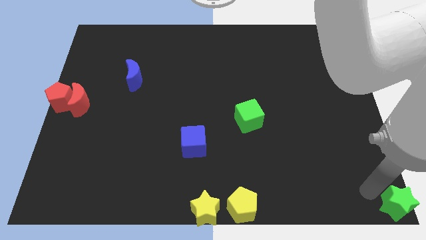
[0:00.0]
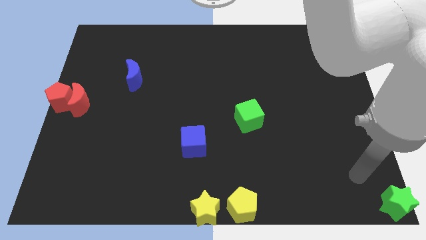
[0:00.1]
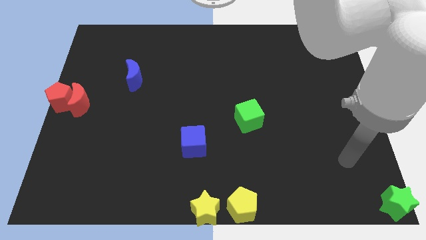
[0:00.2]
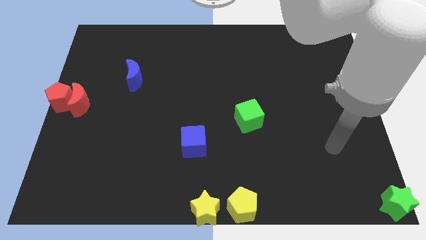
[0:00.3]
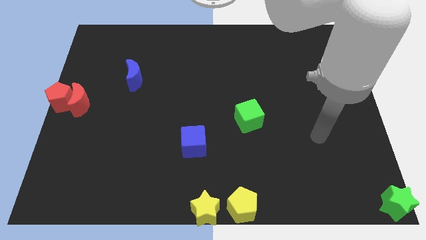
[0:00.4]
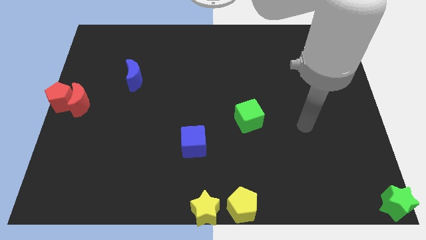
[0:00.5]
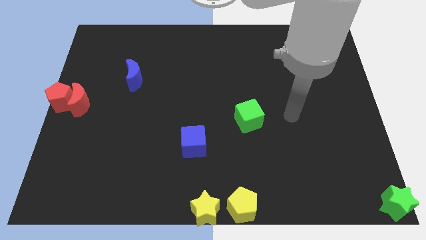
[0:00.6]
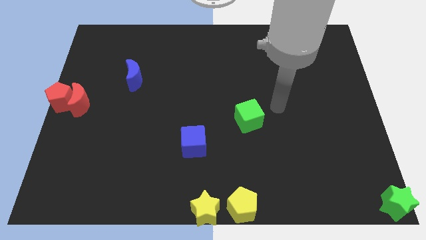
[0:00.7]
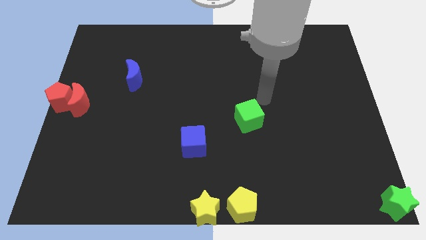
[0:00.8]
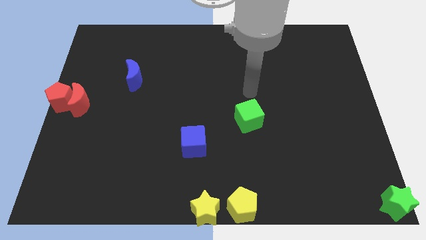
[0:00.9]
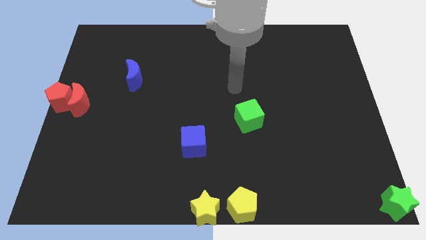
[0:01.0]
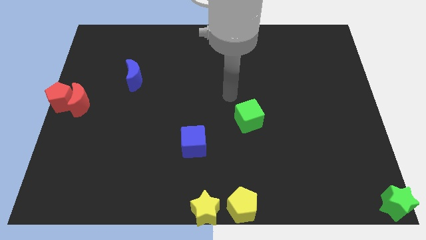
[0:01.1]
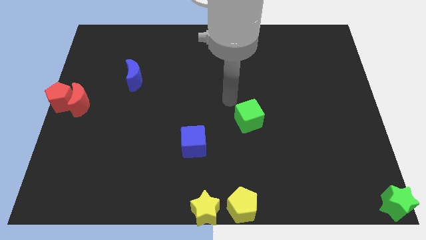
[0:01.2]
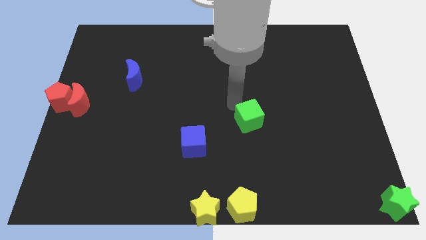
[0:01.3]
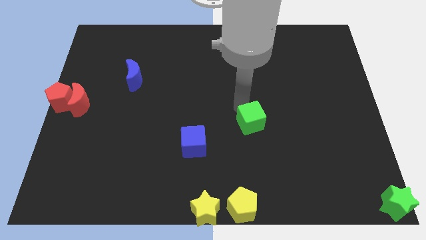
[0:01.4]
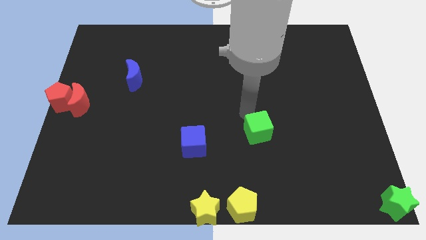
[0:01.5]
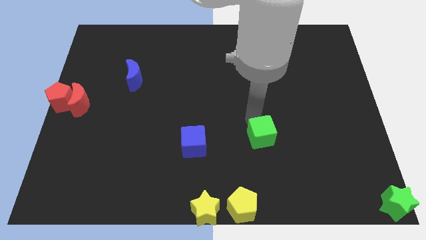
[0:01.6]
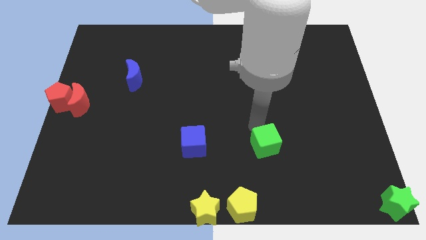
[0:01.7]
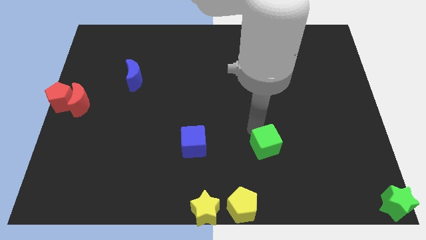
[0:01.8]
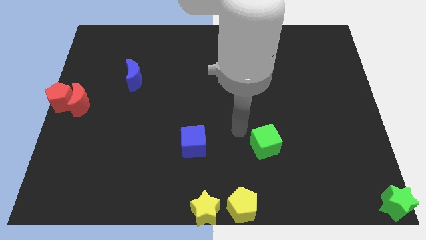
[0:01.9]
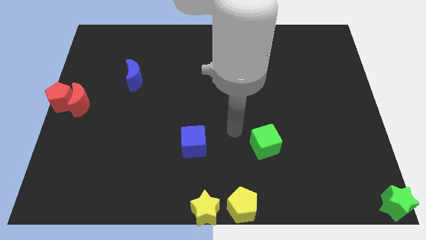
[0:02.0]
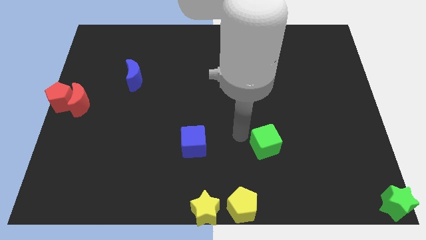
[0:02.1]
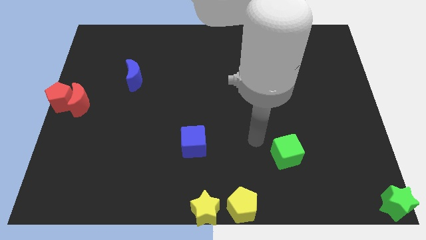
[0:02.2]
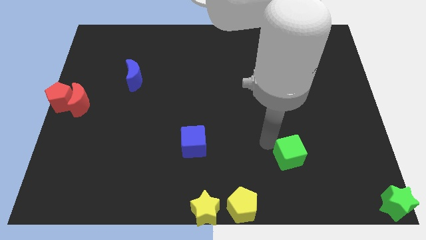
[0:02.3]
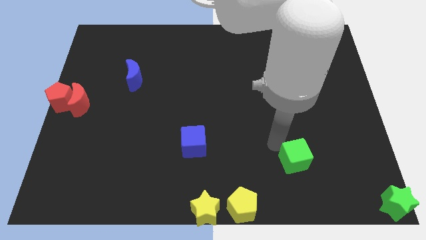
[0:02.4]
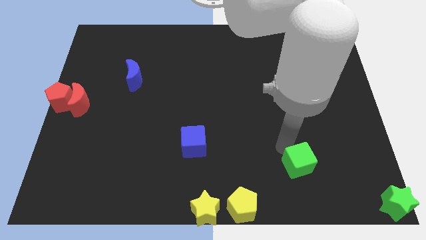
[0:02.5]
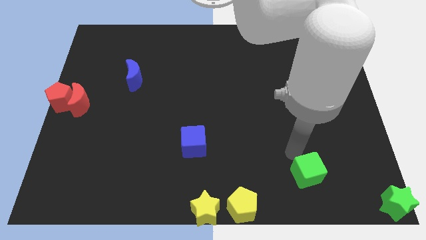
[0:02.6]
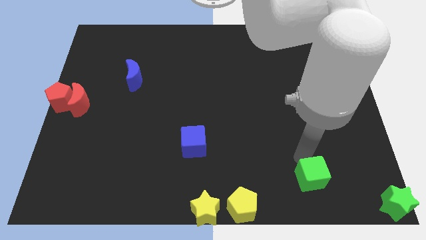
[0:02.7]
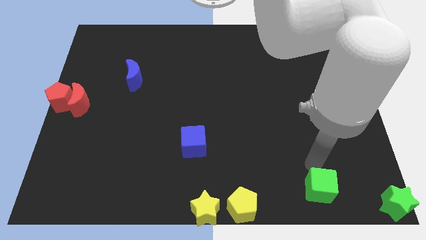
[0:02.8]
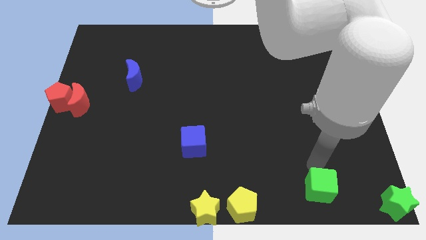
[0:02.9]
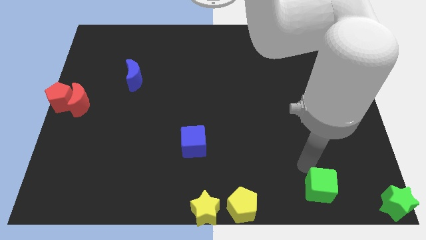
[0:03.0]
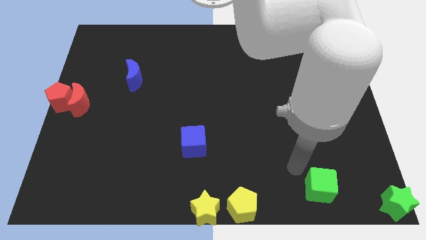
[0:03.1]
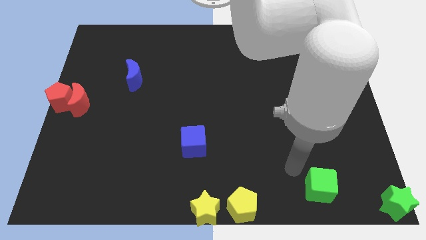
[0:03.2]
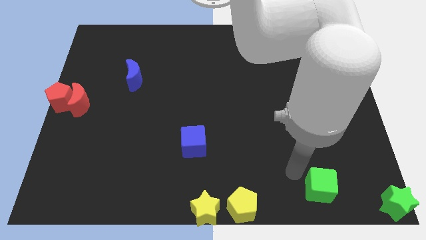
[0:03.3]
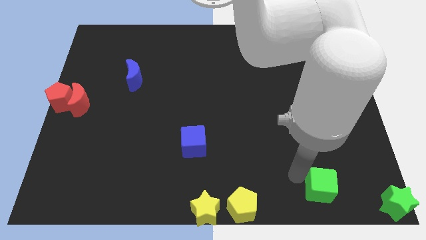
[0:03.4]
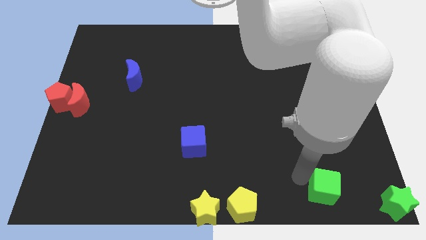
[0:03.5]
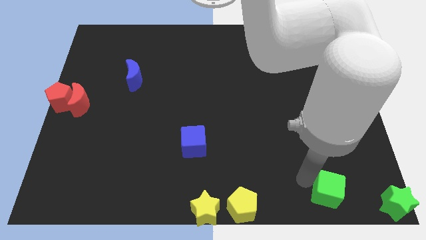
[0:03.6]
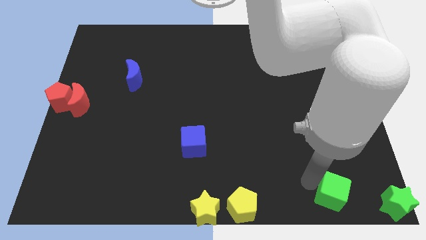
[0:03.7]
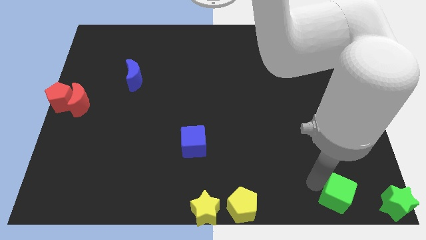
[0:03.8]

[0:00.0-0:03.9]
slide the green cube towards the left side of the green star

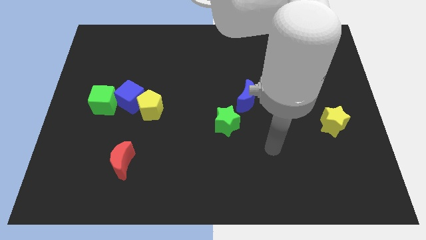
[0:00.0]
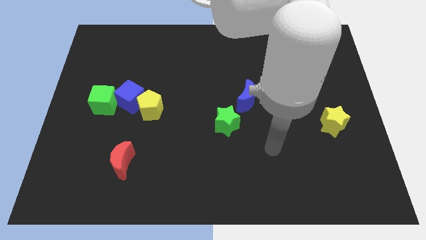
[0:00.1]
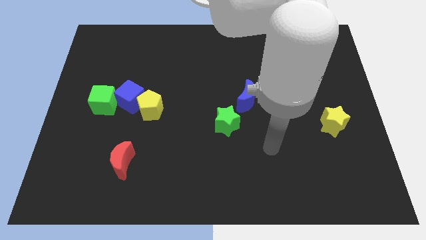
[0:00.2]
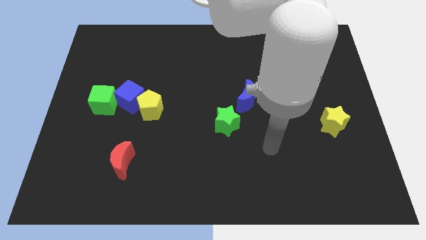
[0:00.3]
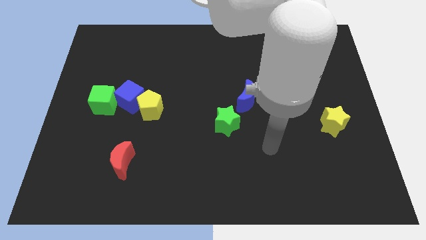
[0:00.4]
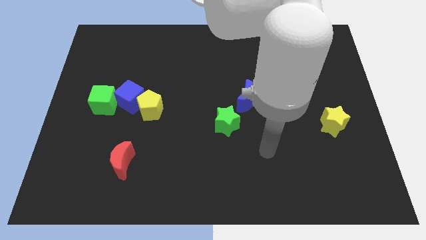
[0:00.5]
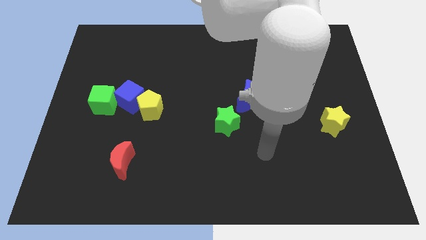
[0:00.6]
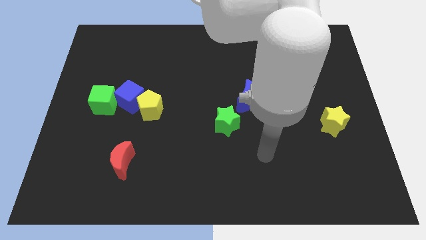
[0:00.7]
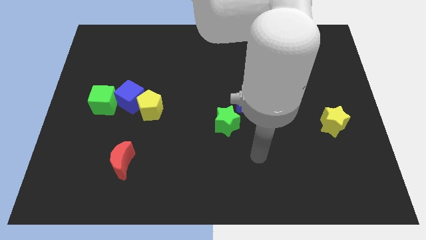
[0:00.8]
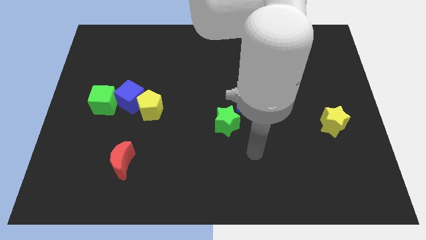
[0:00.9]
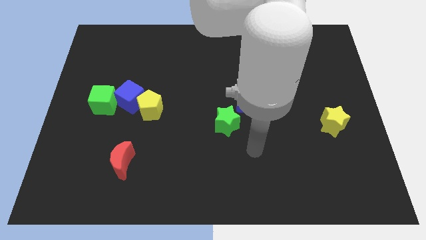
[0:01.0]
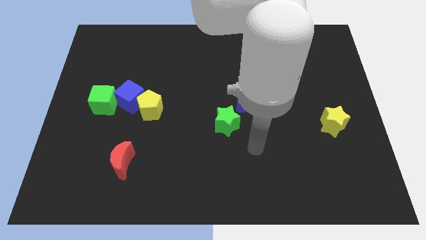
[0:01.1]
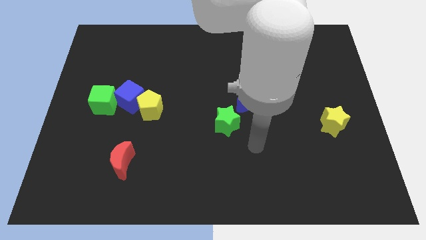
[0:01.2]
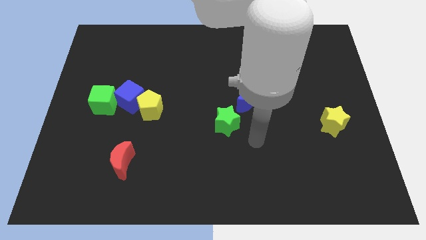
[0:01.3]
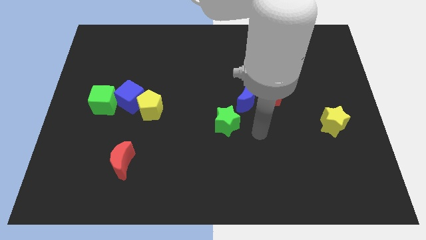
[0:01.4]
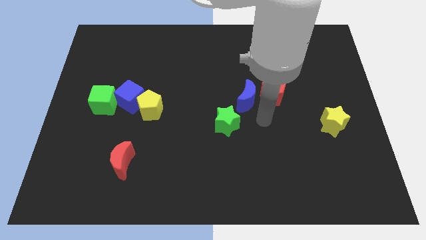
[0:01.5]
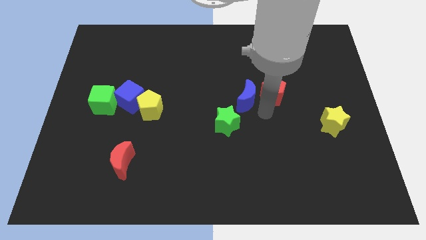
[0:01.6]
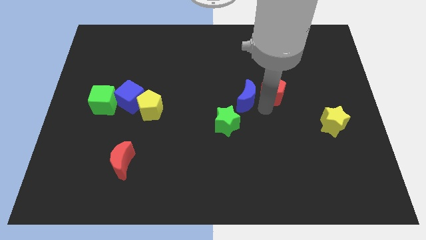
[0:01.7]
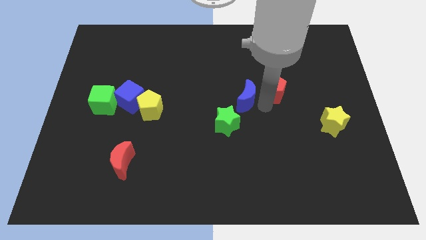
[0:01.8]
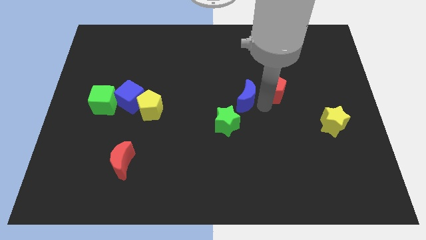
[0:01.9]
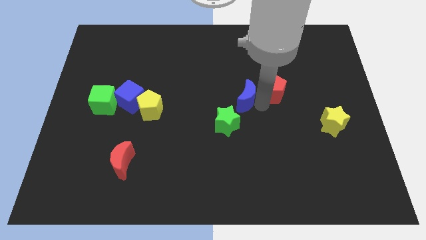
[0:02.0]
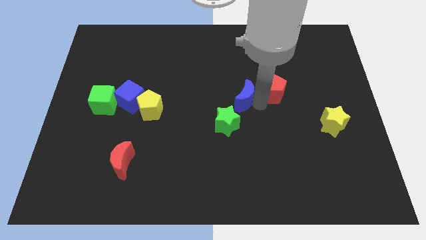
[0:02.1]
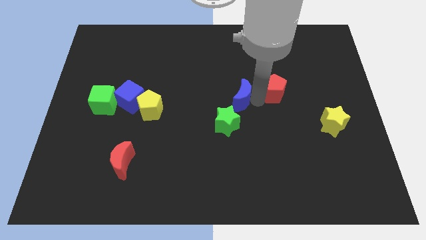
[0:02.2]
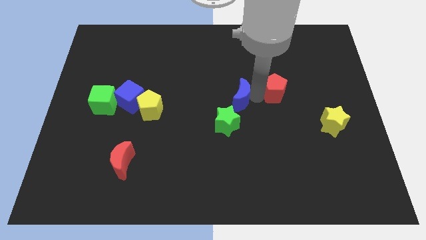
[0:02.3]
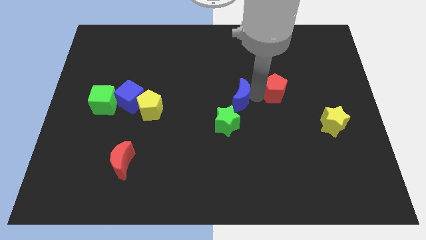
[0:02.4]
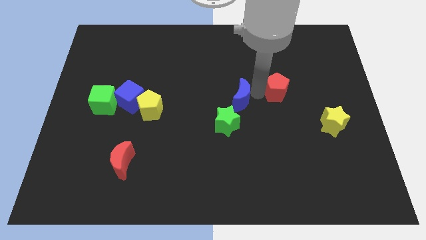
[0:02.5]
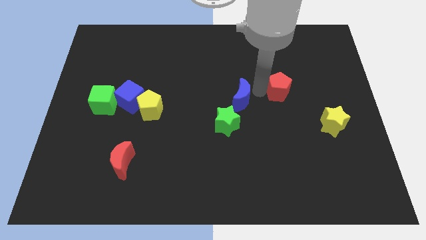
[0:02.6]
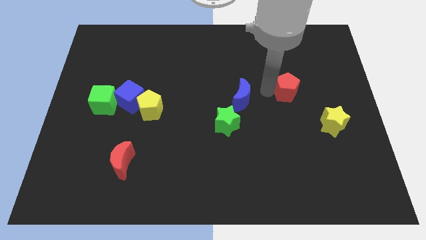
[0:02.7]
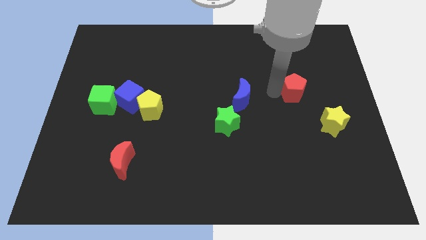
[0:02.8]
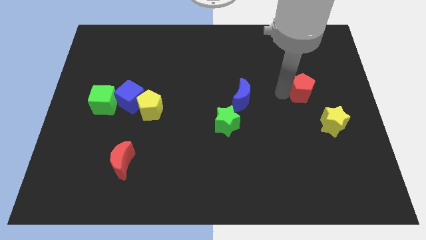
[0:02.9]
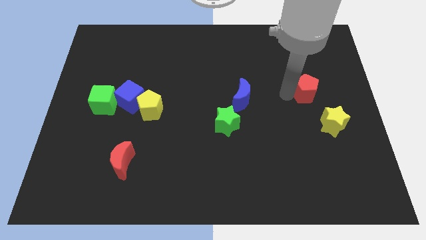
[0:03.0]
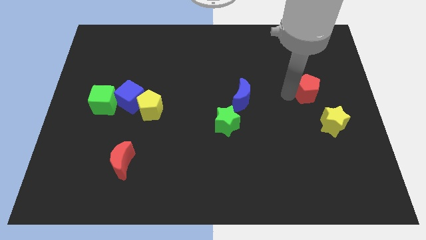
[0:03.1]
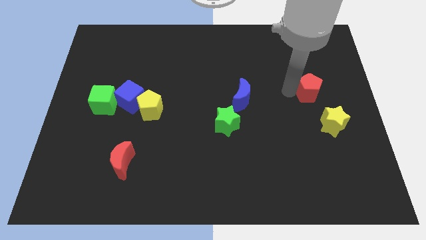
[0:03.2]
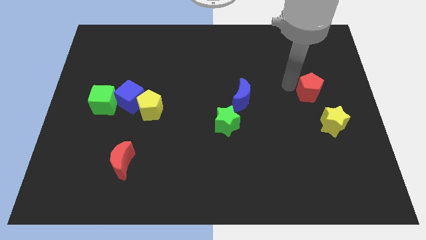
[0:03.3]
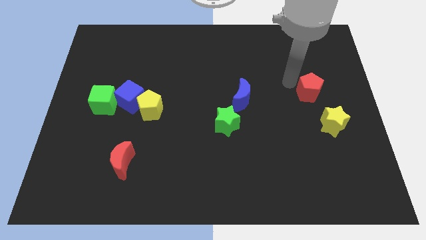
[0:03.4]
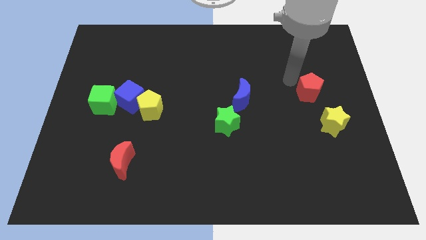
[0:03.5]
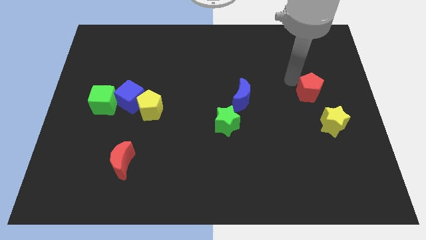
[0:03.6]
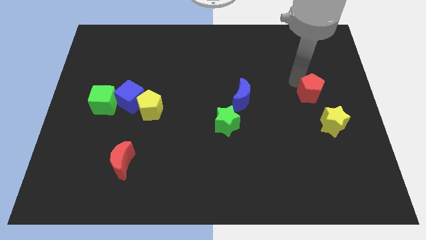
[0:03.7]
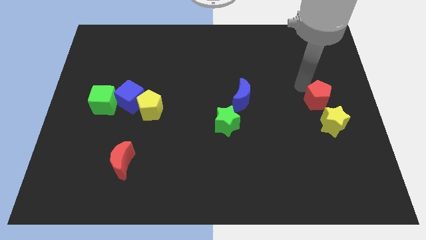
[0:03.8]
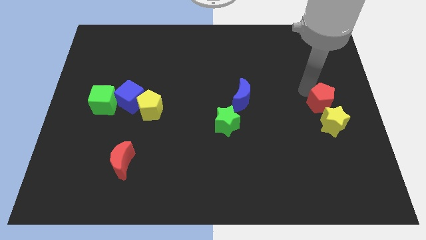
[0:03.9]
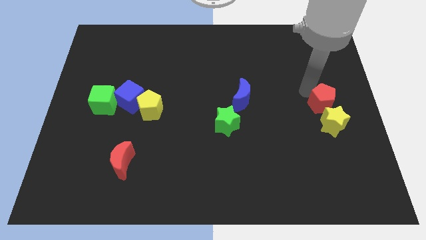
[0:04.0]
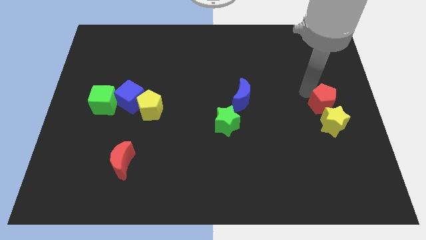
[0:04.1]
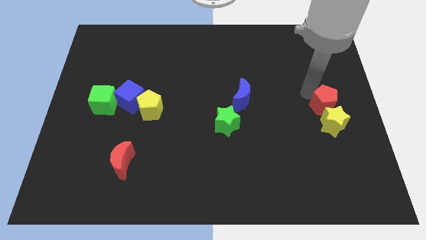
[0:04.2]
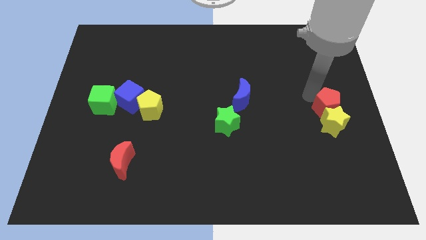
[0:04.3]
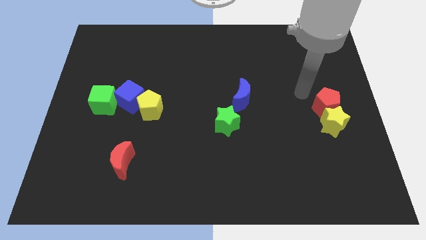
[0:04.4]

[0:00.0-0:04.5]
push the red pentagon into the yellow star

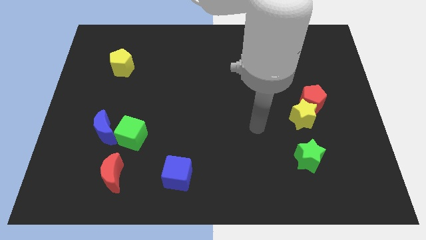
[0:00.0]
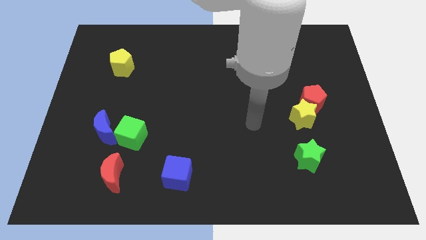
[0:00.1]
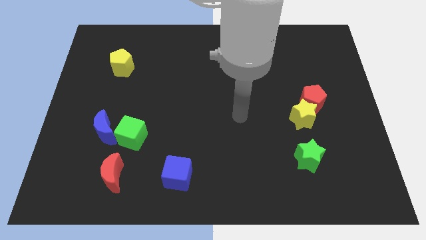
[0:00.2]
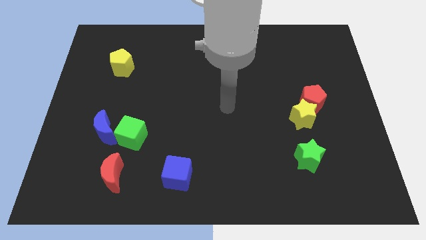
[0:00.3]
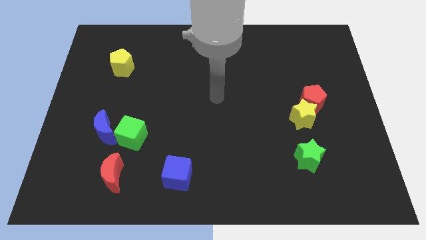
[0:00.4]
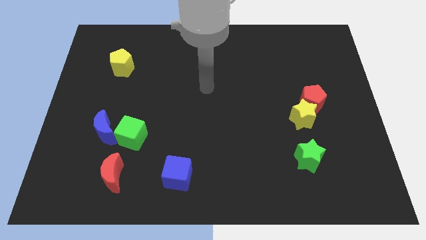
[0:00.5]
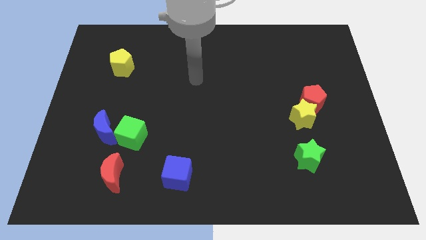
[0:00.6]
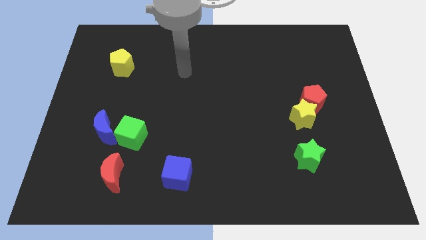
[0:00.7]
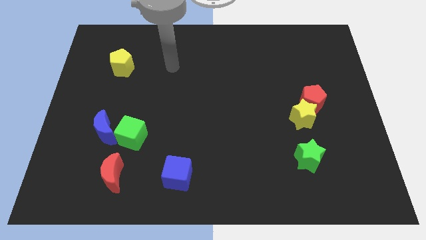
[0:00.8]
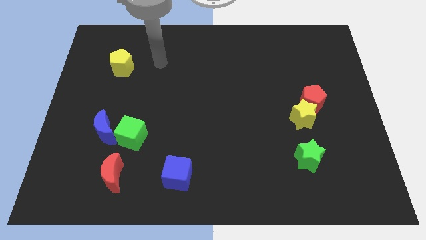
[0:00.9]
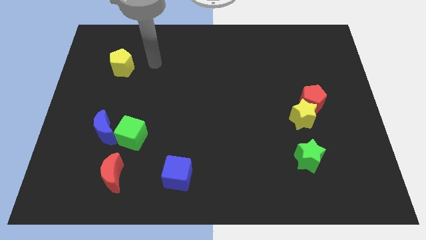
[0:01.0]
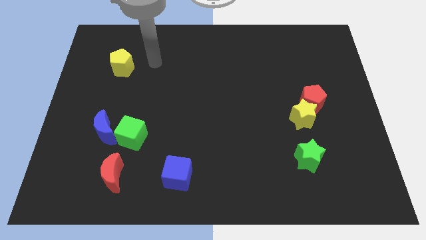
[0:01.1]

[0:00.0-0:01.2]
move your arm towards the yellow pentagon
